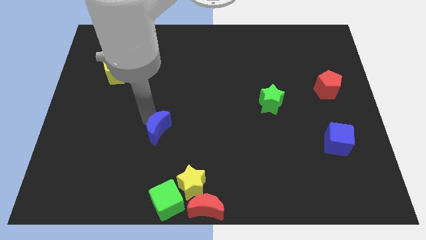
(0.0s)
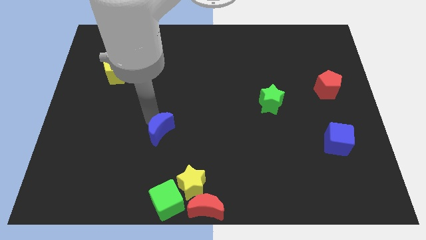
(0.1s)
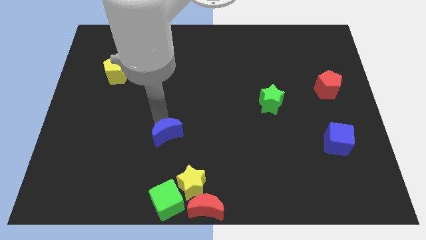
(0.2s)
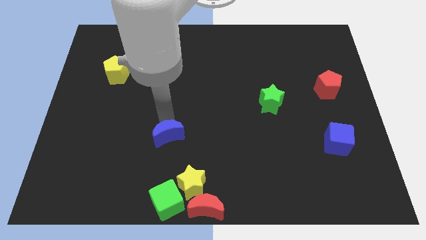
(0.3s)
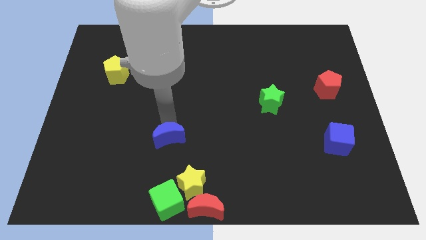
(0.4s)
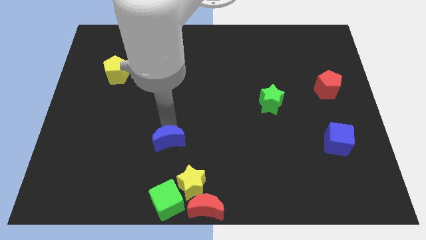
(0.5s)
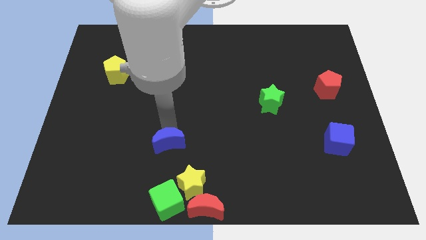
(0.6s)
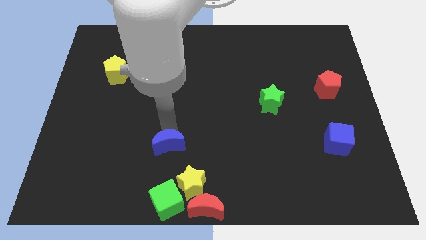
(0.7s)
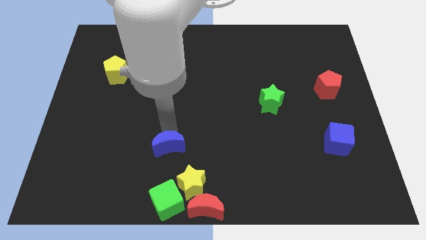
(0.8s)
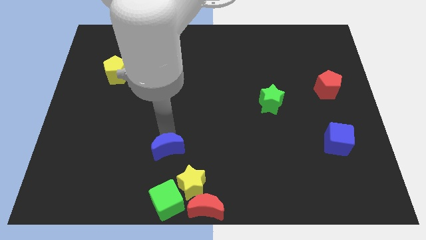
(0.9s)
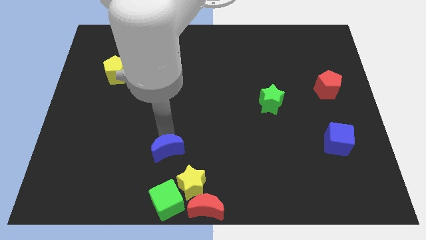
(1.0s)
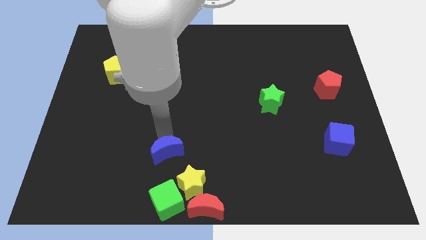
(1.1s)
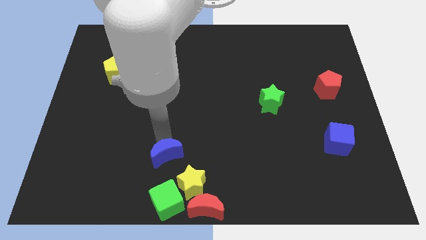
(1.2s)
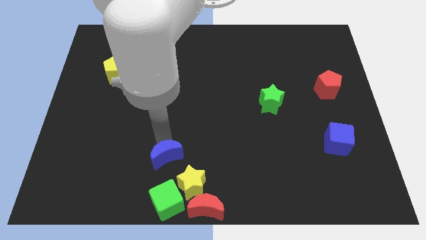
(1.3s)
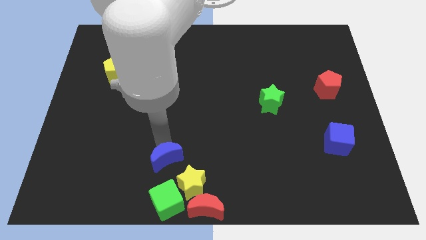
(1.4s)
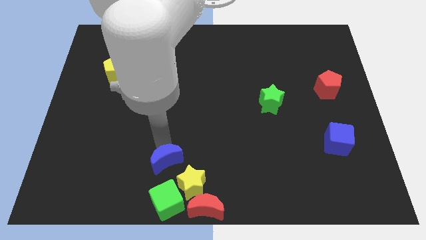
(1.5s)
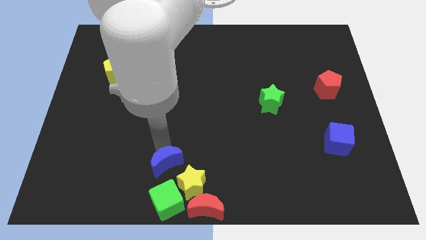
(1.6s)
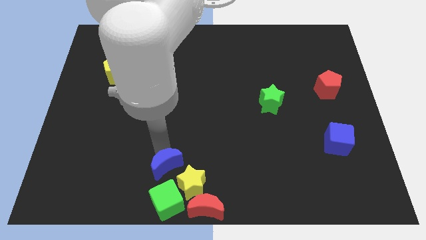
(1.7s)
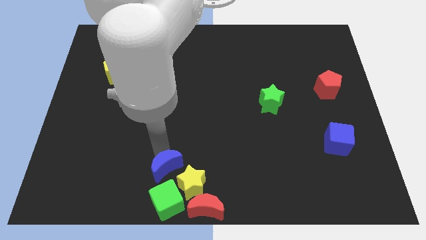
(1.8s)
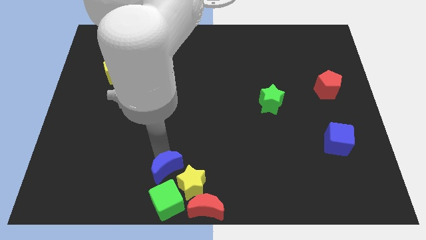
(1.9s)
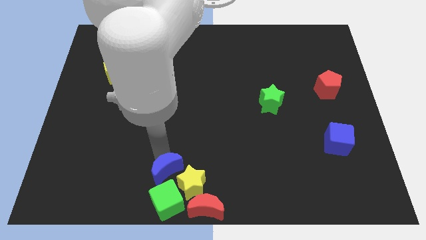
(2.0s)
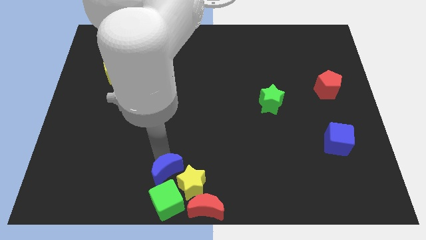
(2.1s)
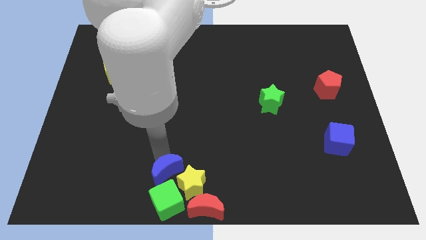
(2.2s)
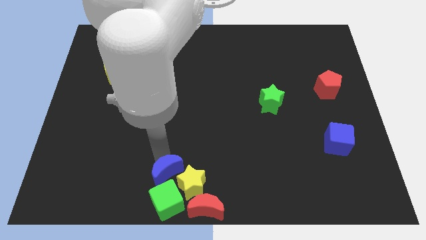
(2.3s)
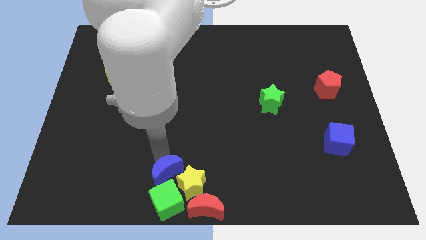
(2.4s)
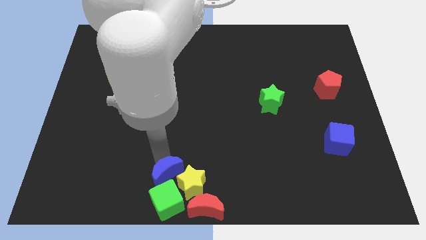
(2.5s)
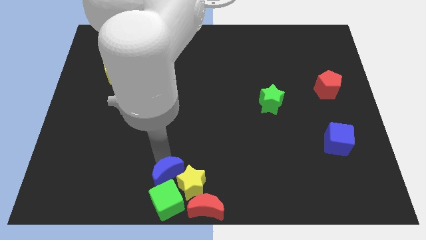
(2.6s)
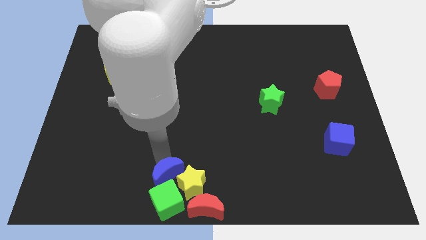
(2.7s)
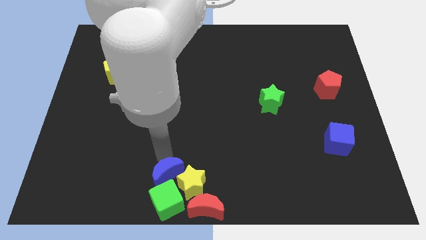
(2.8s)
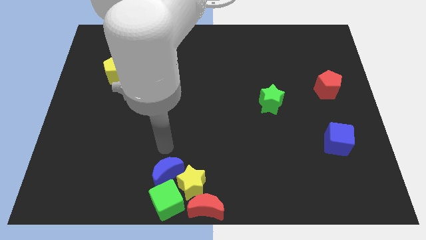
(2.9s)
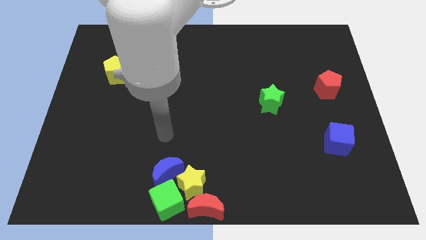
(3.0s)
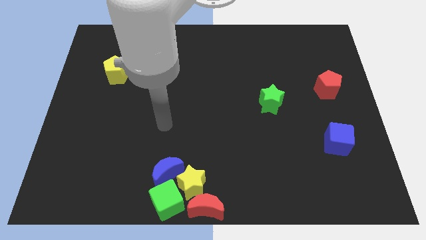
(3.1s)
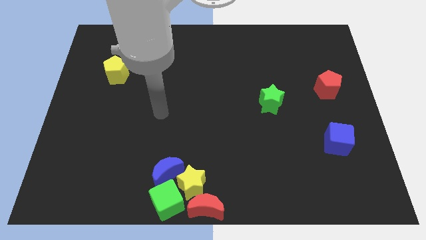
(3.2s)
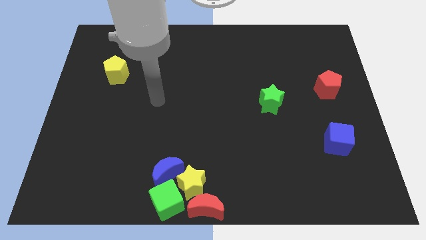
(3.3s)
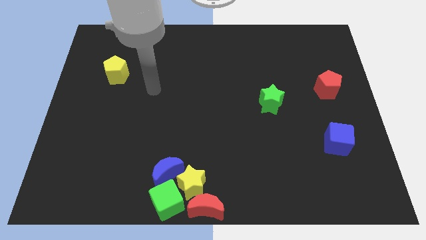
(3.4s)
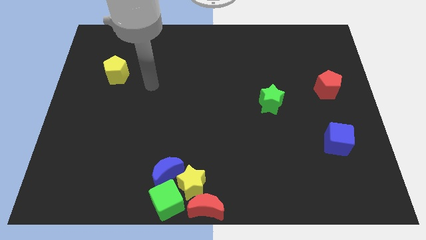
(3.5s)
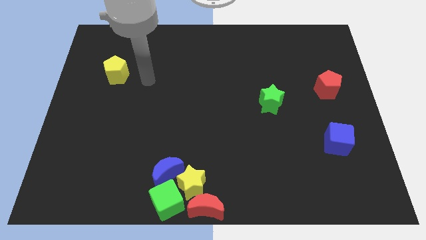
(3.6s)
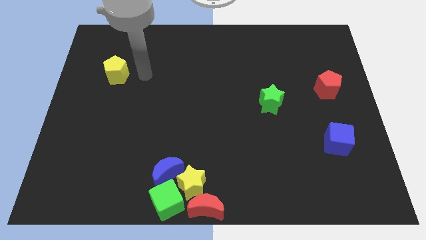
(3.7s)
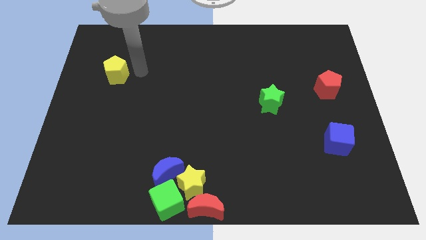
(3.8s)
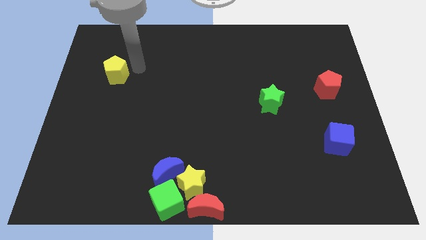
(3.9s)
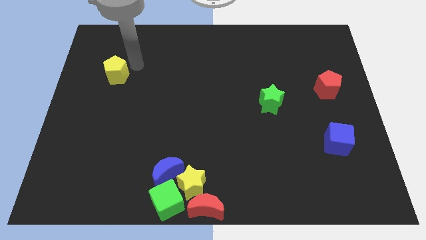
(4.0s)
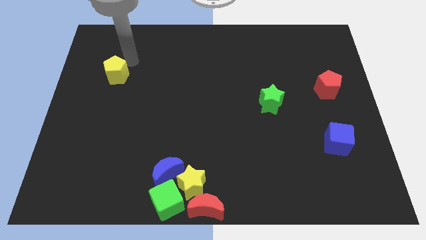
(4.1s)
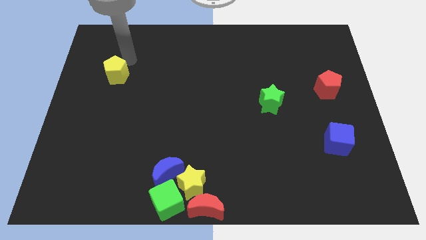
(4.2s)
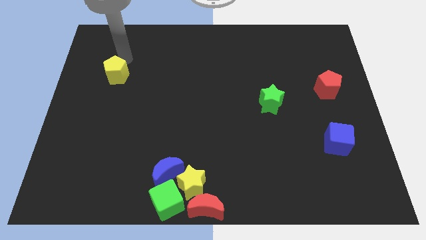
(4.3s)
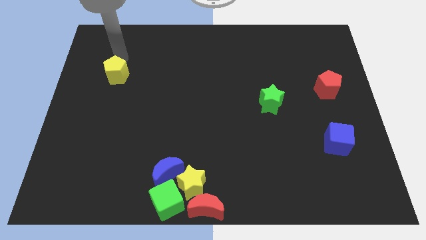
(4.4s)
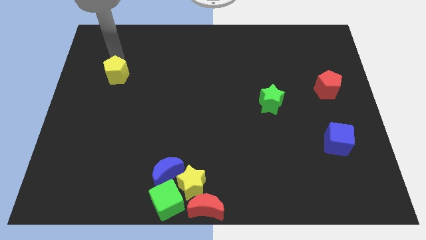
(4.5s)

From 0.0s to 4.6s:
move the blue crescent to the top of the yellow star and green cube

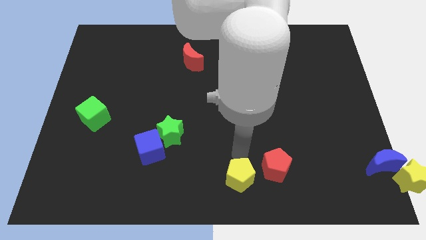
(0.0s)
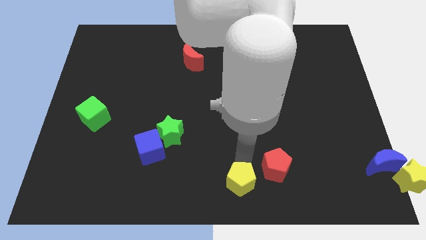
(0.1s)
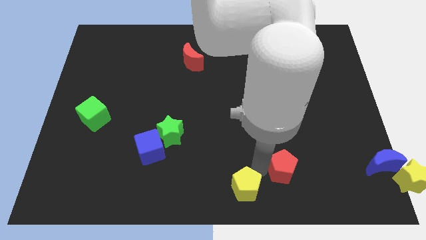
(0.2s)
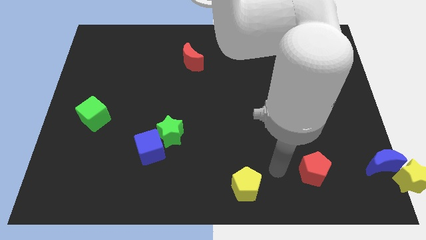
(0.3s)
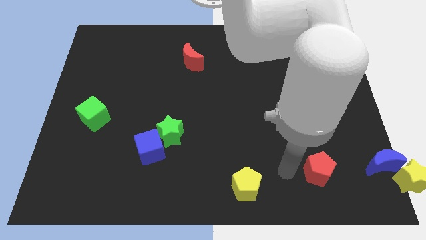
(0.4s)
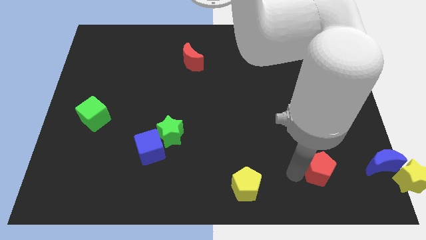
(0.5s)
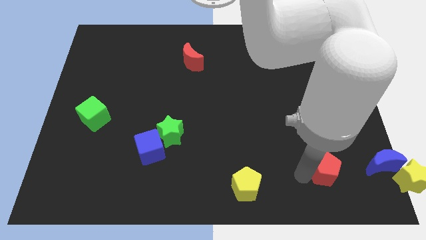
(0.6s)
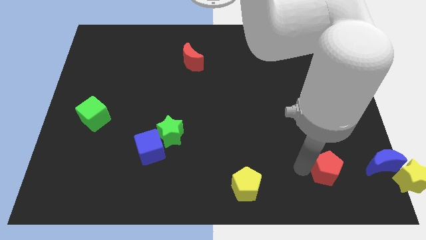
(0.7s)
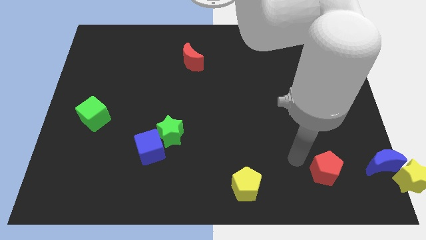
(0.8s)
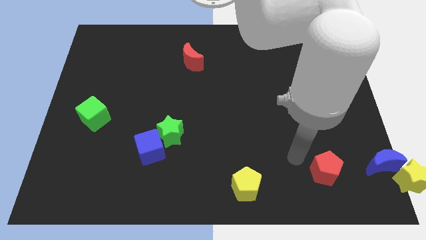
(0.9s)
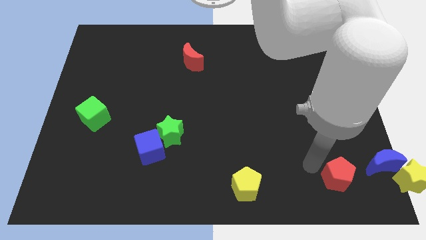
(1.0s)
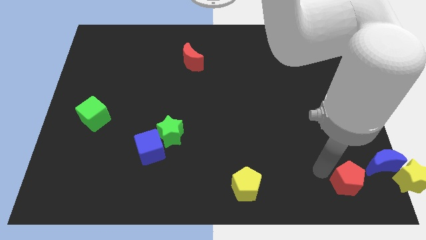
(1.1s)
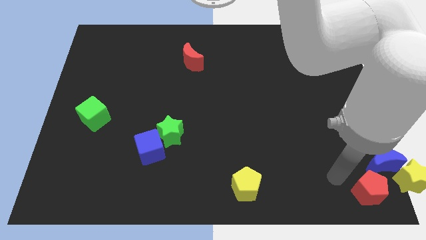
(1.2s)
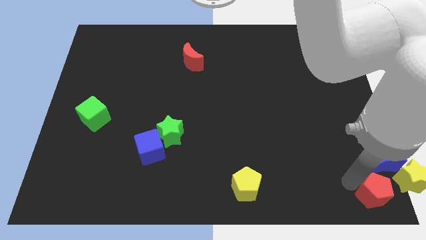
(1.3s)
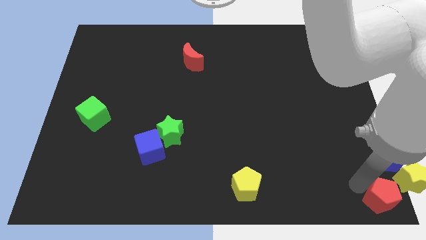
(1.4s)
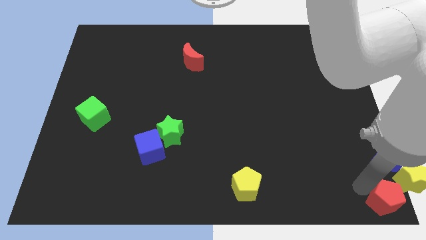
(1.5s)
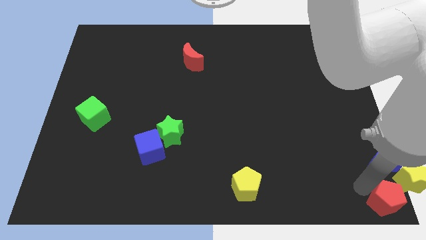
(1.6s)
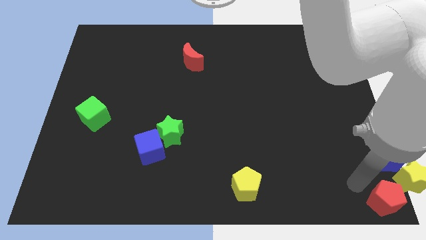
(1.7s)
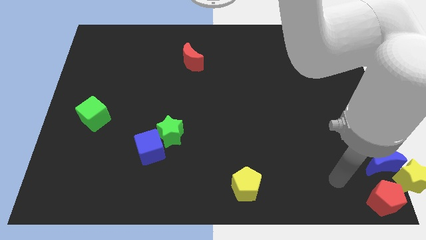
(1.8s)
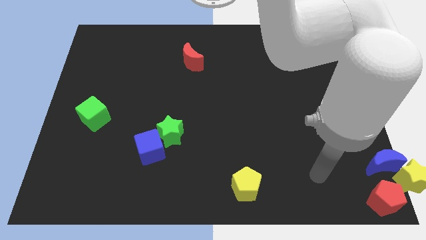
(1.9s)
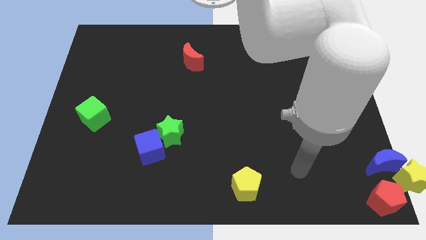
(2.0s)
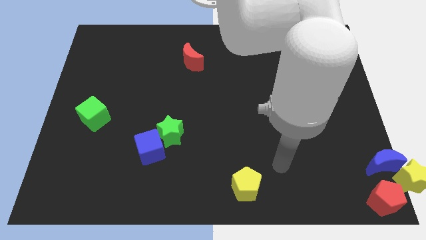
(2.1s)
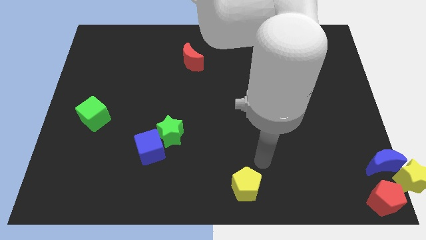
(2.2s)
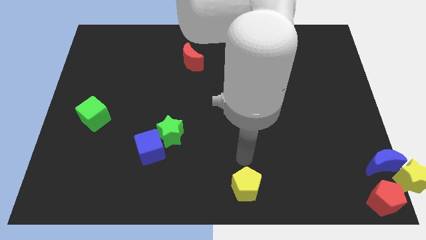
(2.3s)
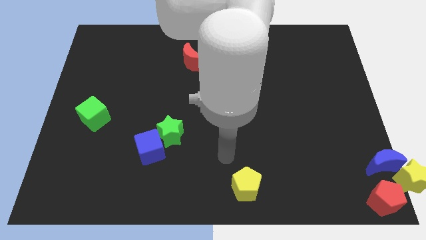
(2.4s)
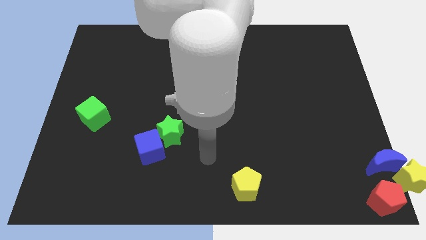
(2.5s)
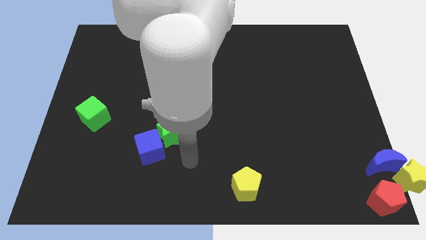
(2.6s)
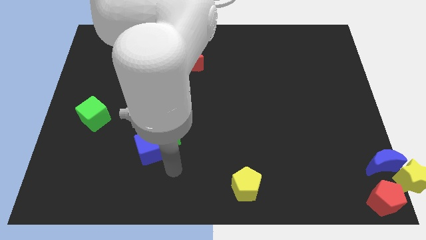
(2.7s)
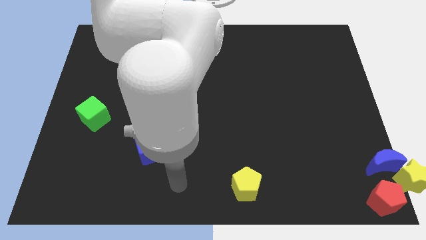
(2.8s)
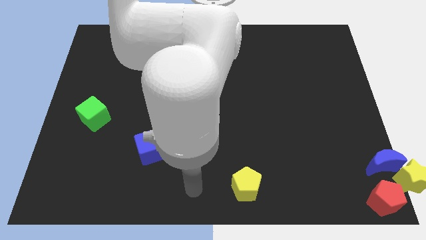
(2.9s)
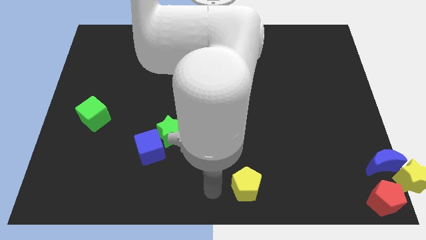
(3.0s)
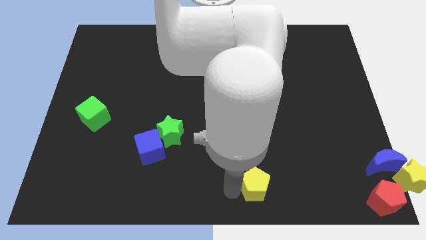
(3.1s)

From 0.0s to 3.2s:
put the red pentagon vertically below the blue moon

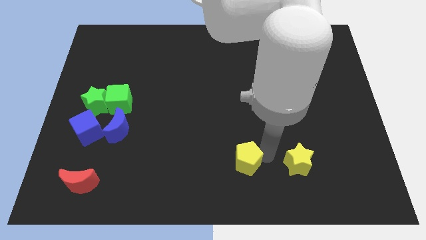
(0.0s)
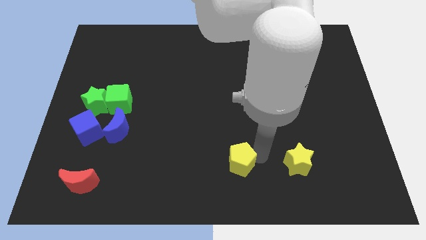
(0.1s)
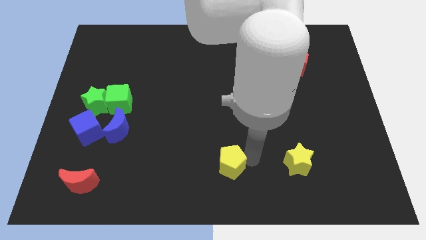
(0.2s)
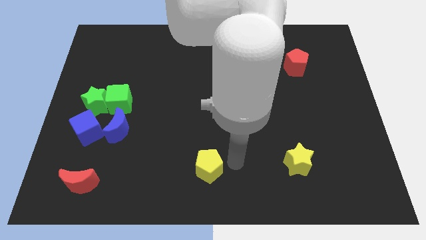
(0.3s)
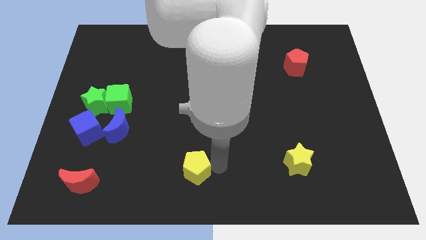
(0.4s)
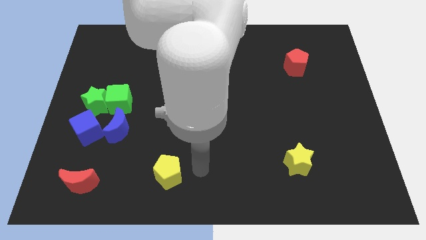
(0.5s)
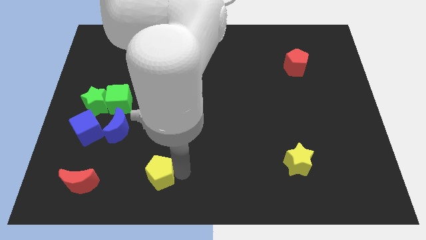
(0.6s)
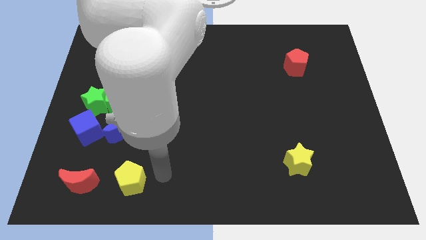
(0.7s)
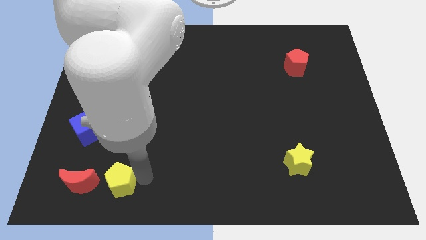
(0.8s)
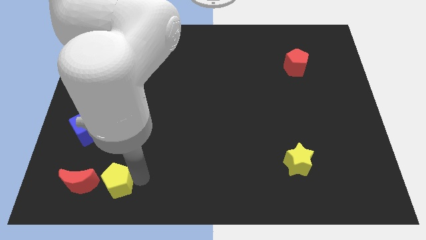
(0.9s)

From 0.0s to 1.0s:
push the yellow pentagon right to the red moon

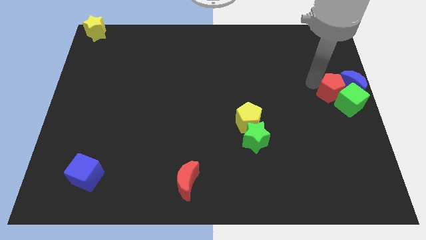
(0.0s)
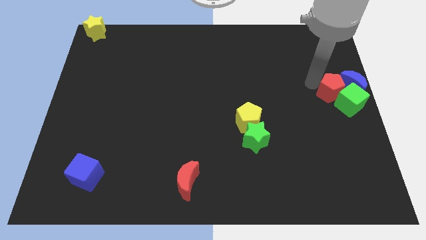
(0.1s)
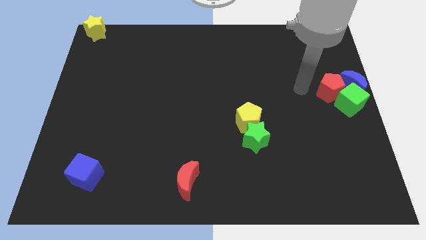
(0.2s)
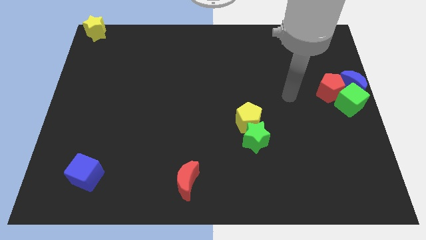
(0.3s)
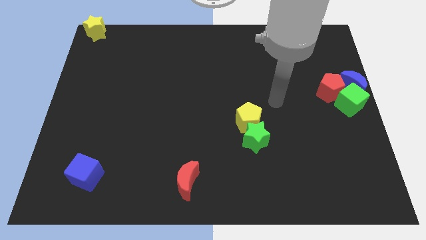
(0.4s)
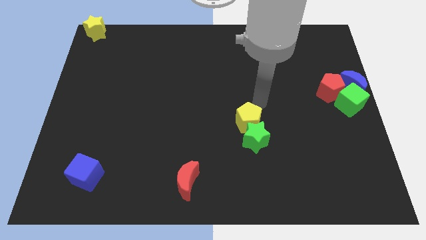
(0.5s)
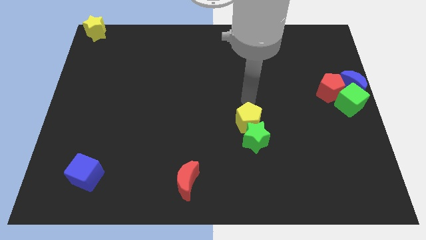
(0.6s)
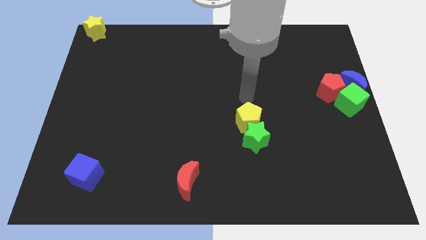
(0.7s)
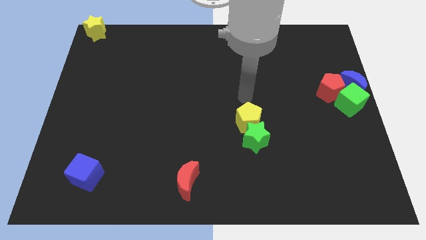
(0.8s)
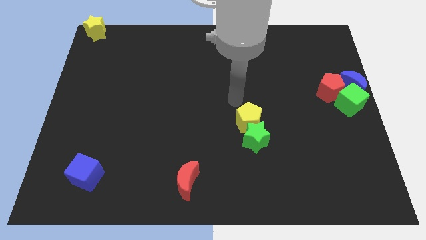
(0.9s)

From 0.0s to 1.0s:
move the arm towards the top of the yellow pentagon
